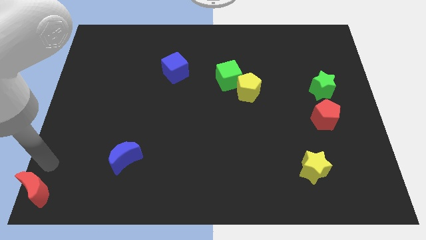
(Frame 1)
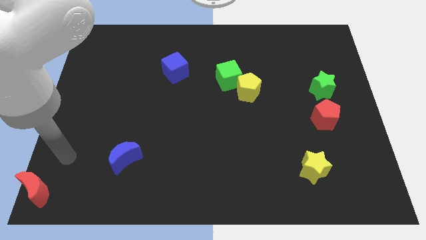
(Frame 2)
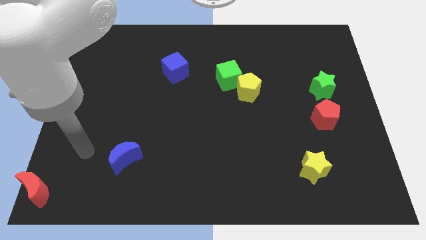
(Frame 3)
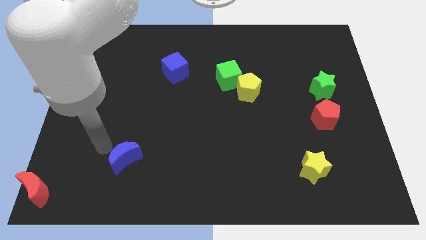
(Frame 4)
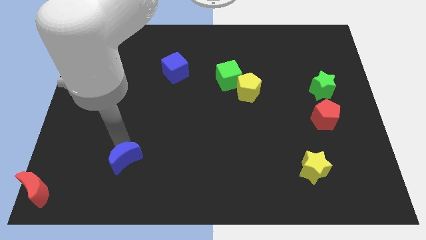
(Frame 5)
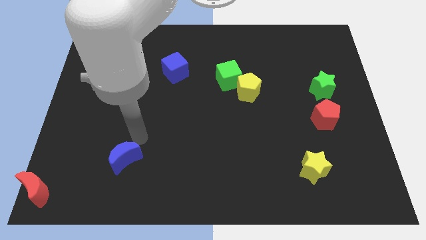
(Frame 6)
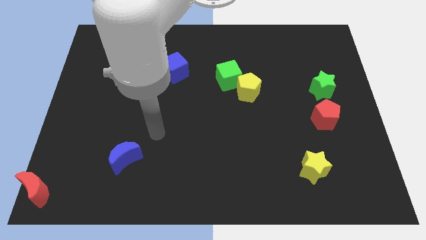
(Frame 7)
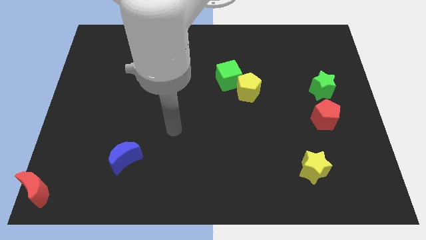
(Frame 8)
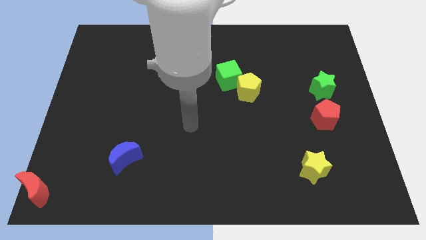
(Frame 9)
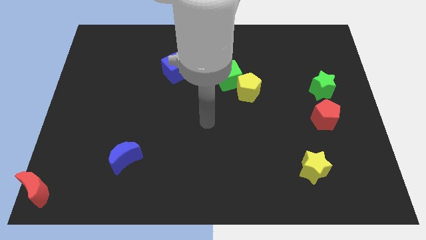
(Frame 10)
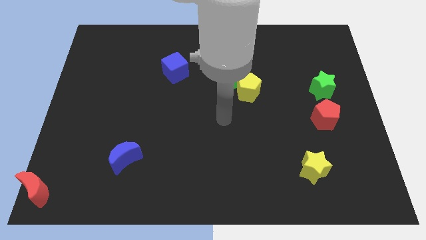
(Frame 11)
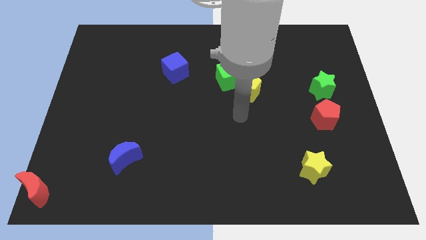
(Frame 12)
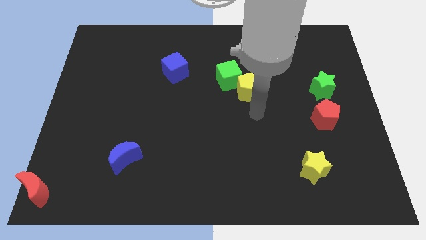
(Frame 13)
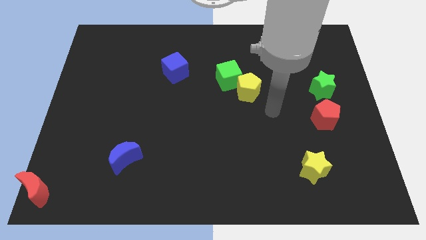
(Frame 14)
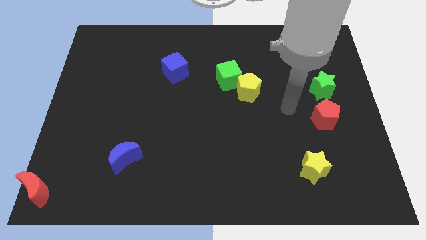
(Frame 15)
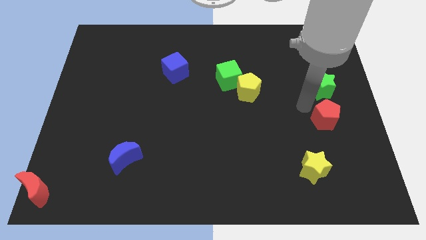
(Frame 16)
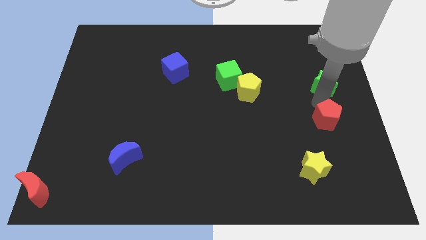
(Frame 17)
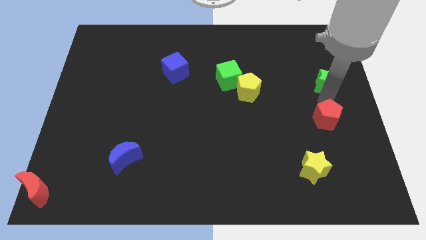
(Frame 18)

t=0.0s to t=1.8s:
move your arm to the top of the red pentagon

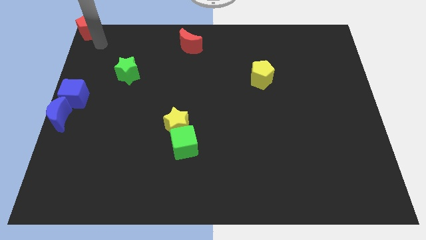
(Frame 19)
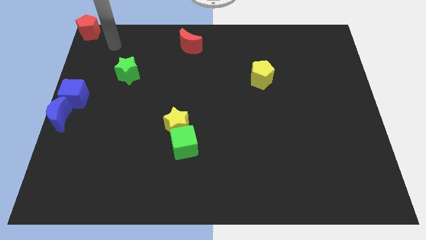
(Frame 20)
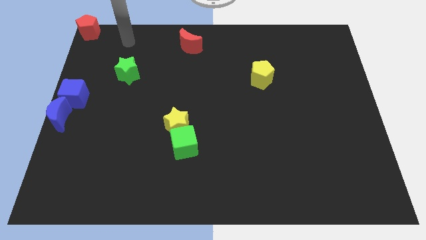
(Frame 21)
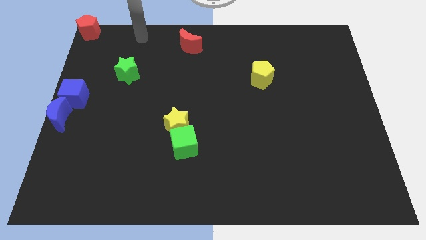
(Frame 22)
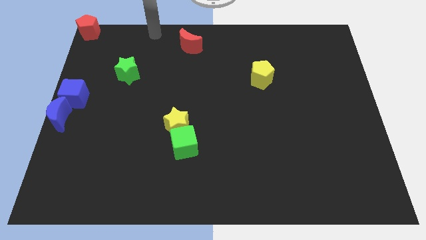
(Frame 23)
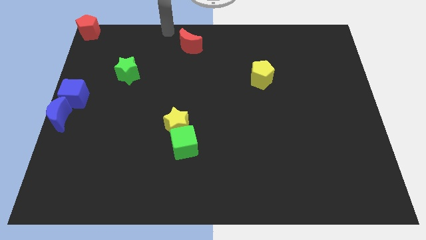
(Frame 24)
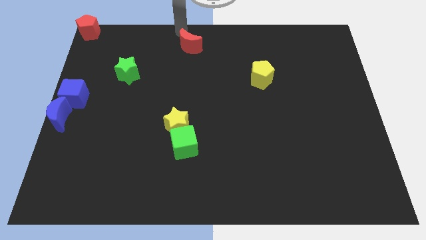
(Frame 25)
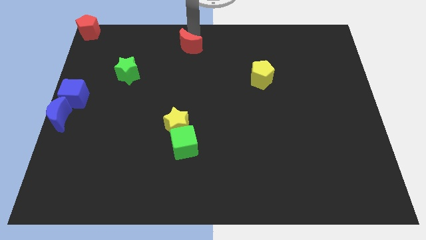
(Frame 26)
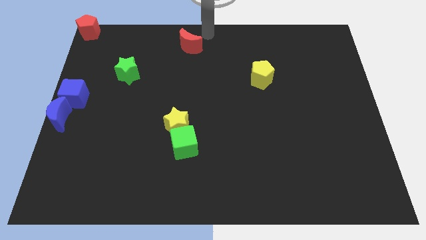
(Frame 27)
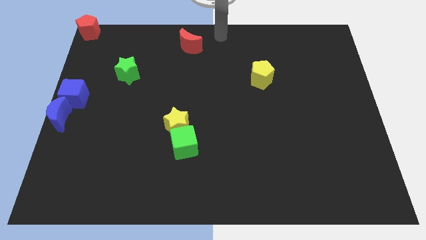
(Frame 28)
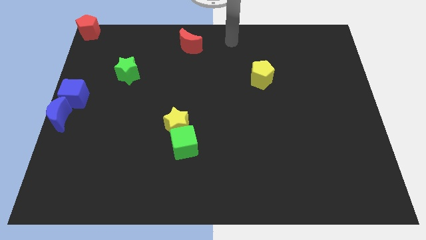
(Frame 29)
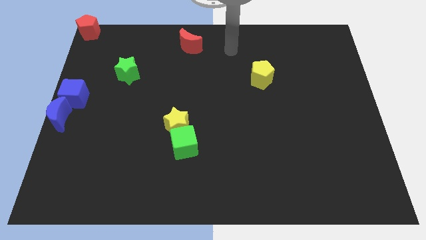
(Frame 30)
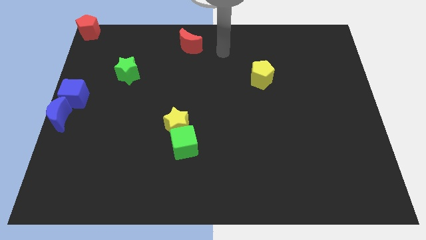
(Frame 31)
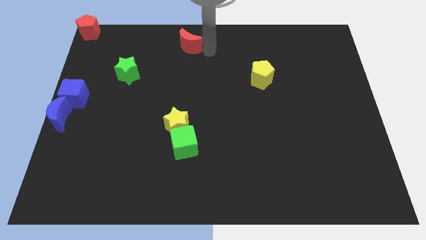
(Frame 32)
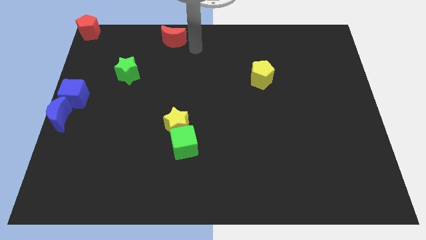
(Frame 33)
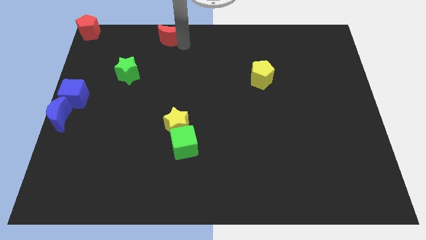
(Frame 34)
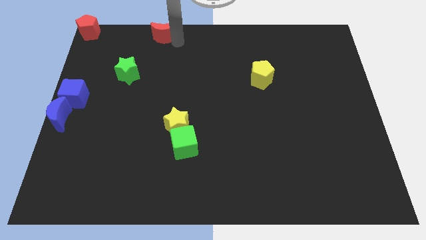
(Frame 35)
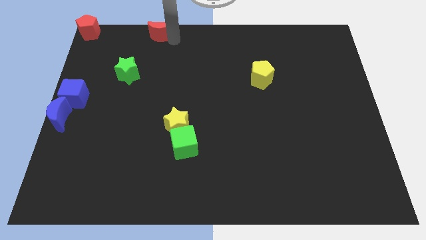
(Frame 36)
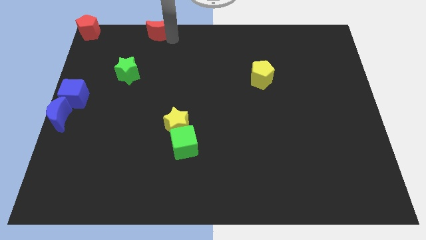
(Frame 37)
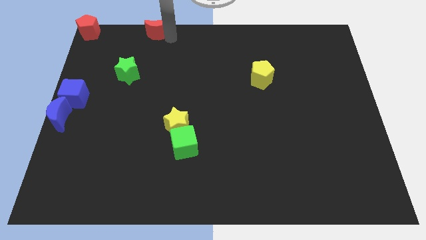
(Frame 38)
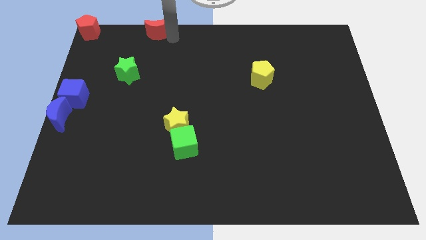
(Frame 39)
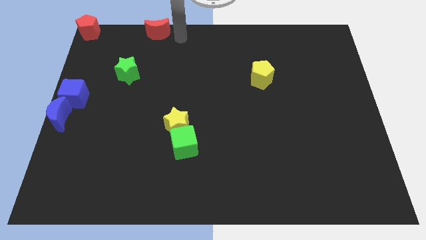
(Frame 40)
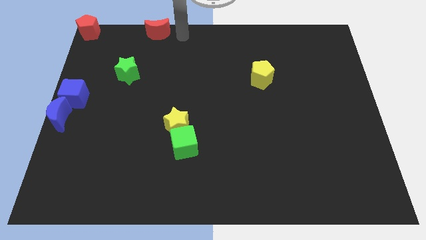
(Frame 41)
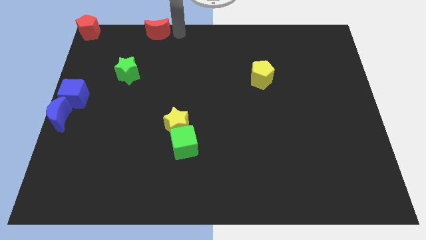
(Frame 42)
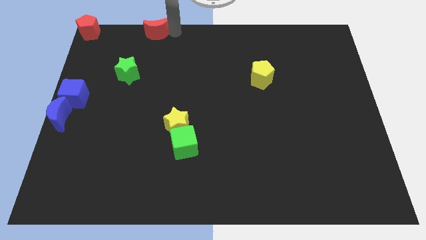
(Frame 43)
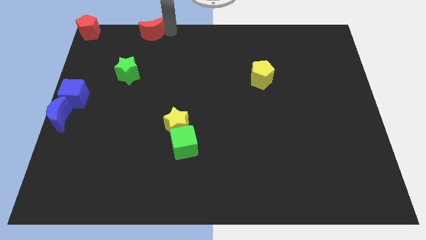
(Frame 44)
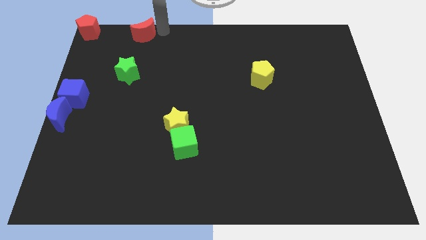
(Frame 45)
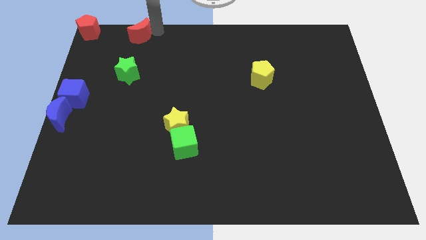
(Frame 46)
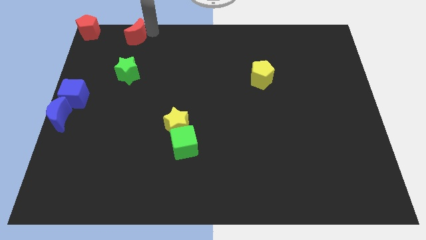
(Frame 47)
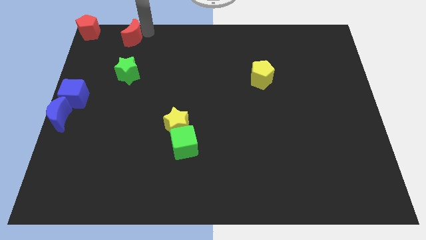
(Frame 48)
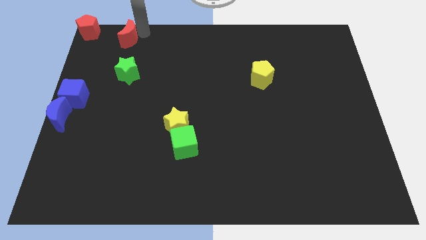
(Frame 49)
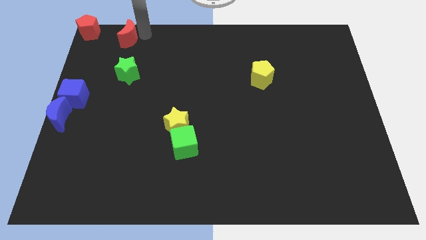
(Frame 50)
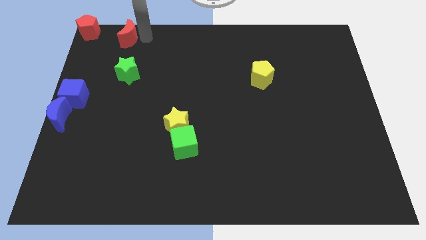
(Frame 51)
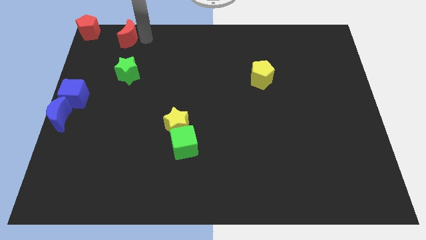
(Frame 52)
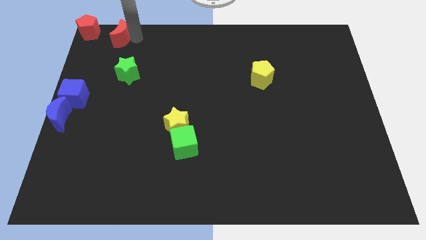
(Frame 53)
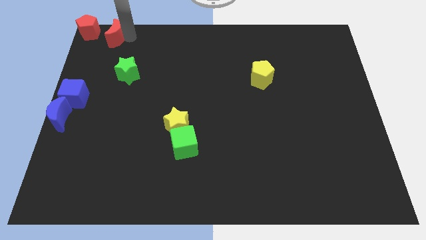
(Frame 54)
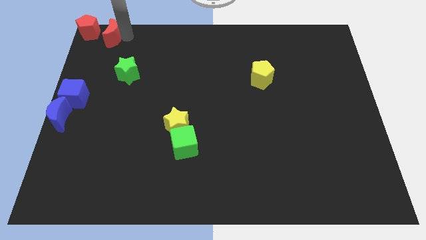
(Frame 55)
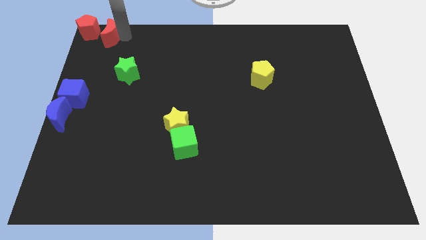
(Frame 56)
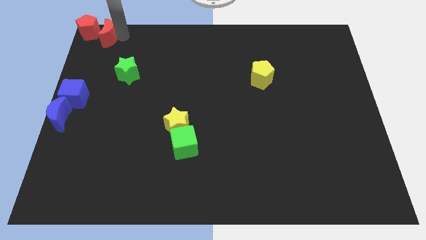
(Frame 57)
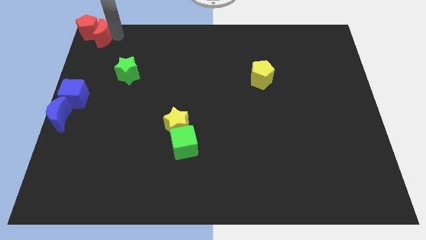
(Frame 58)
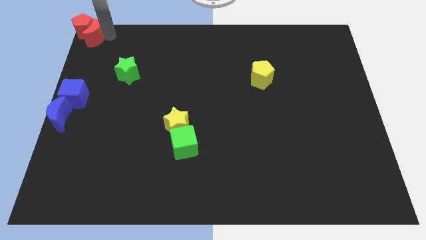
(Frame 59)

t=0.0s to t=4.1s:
add red moon into red pentagon in top left

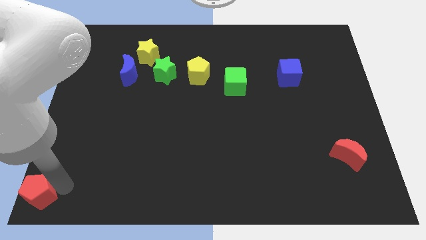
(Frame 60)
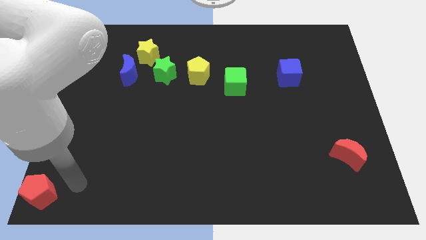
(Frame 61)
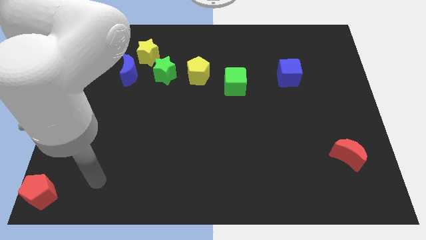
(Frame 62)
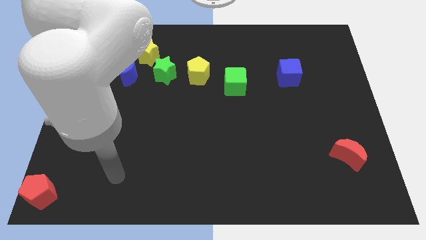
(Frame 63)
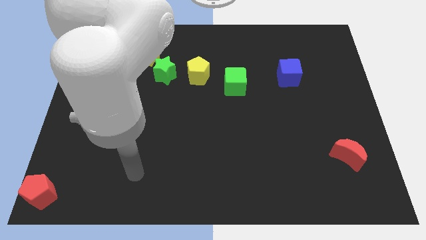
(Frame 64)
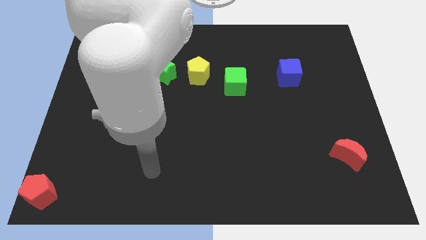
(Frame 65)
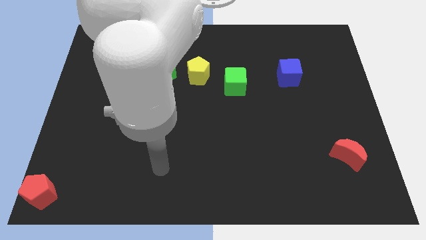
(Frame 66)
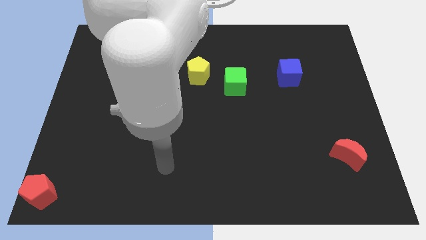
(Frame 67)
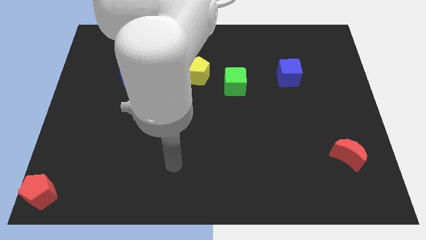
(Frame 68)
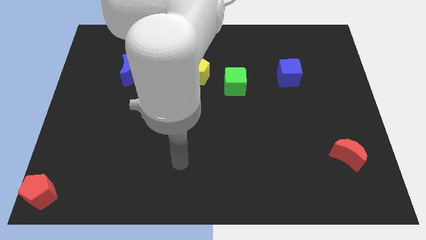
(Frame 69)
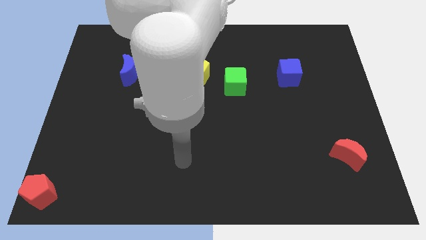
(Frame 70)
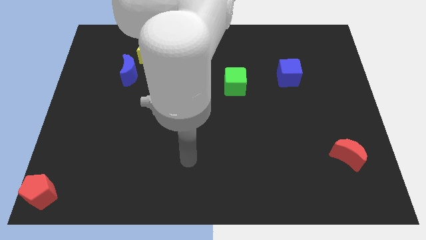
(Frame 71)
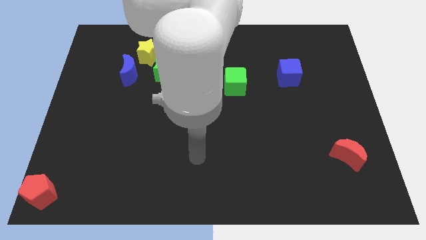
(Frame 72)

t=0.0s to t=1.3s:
move your arm away from the red pentagon

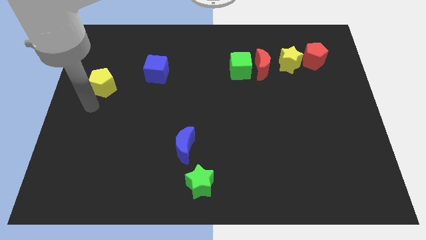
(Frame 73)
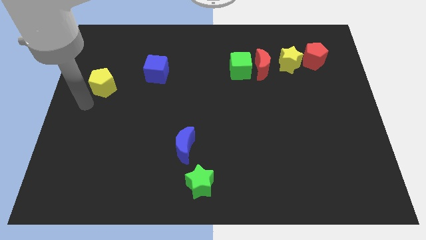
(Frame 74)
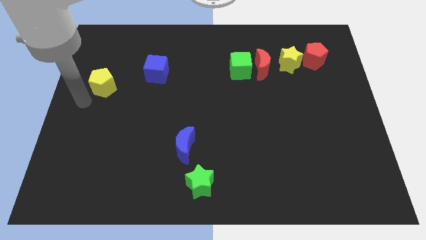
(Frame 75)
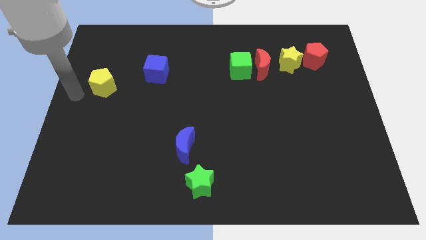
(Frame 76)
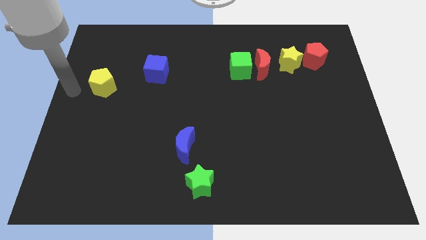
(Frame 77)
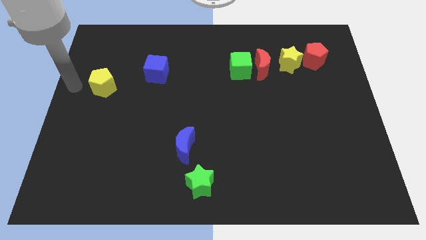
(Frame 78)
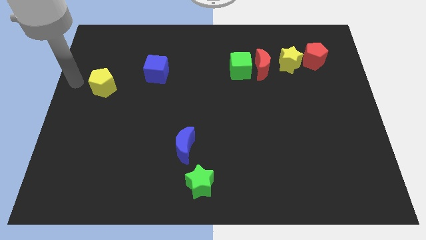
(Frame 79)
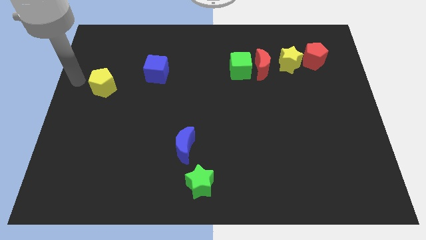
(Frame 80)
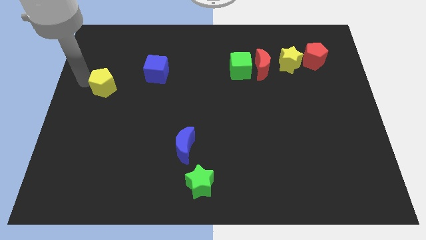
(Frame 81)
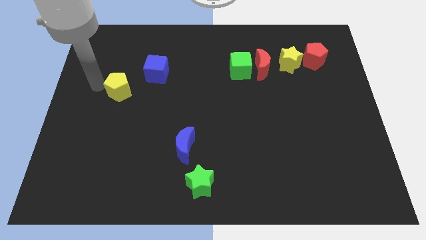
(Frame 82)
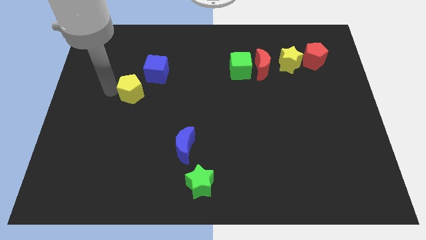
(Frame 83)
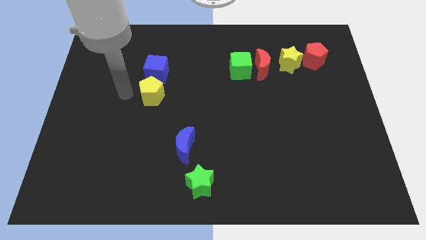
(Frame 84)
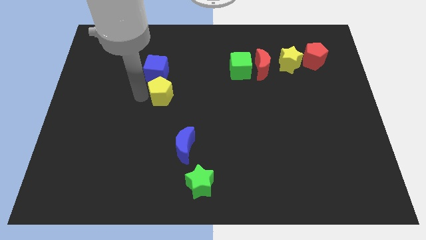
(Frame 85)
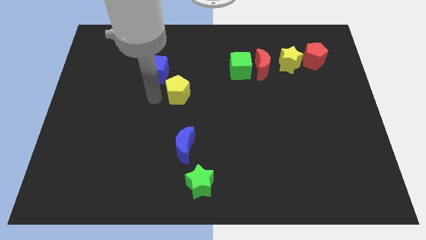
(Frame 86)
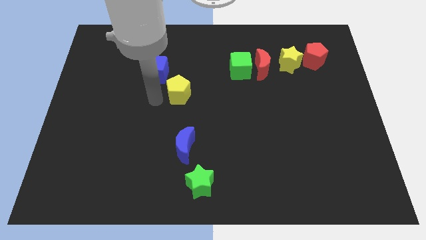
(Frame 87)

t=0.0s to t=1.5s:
move the yellow pentagon to the bottom right of the blue cube

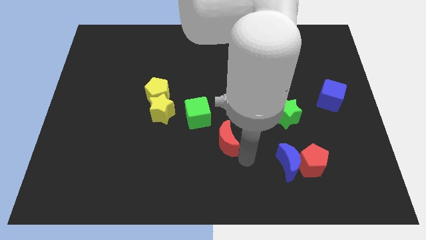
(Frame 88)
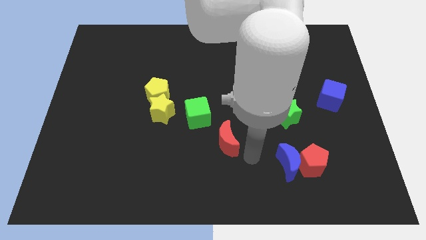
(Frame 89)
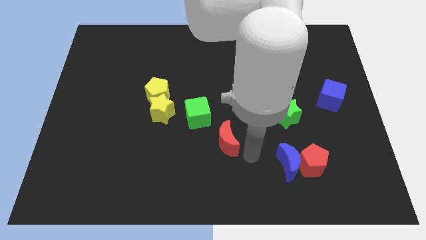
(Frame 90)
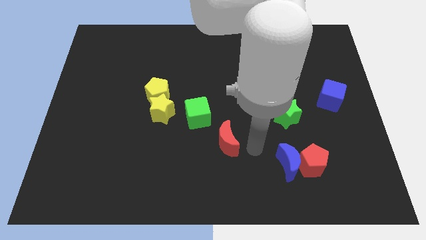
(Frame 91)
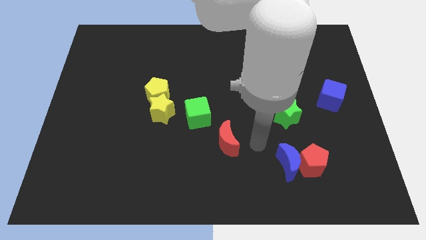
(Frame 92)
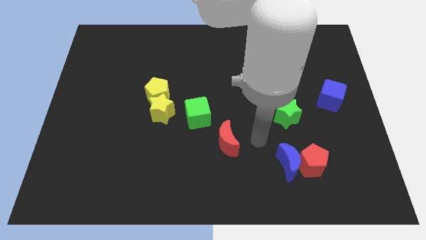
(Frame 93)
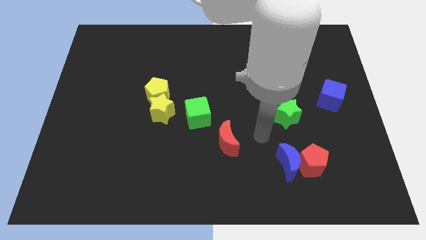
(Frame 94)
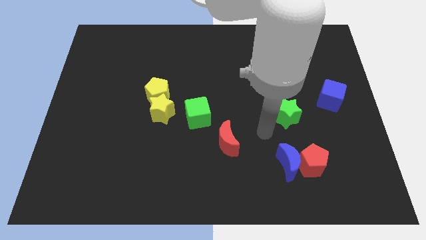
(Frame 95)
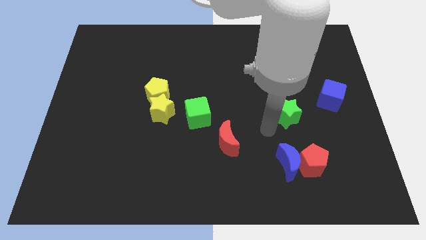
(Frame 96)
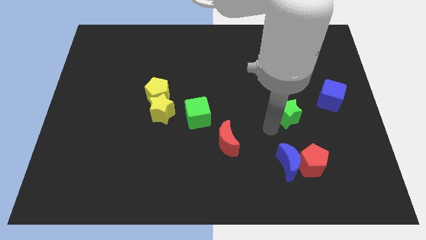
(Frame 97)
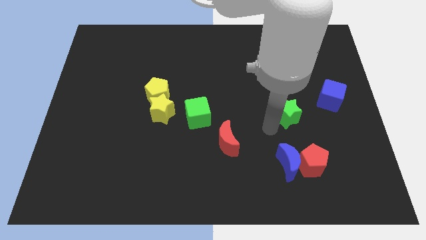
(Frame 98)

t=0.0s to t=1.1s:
point your arm to the left side of green star
